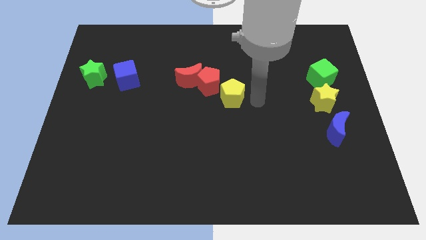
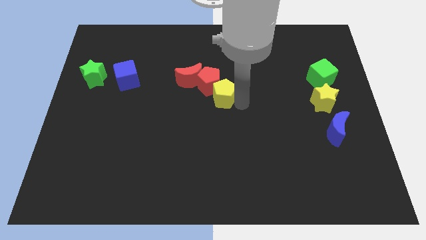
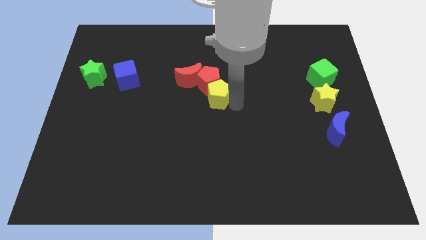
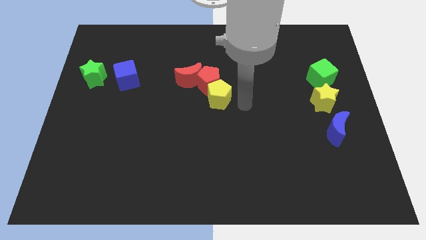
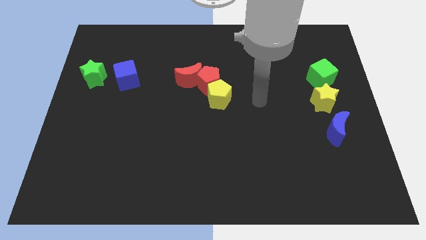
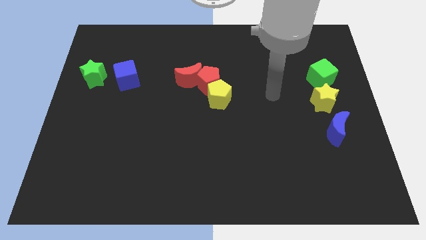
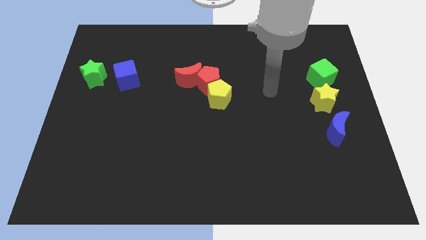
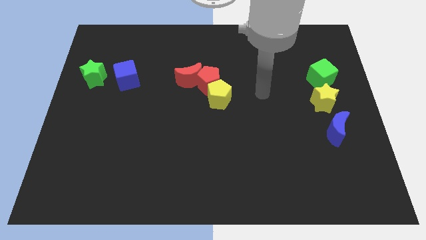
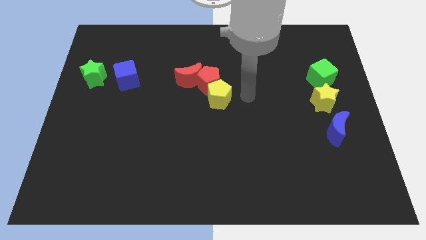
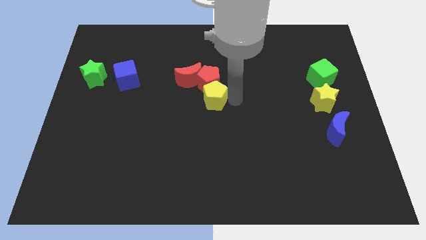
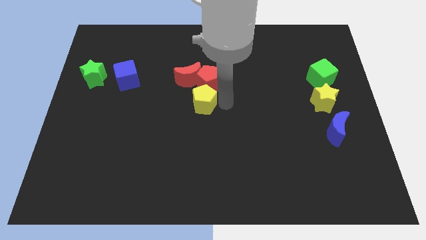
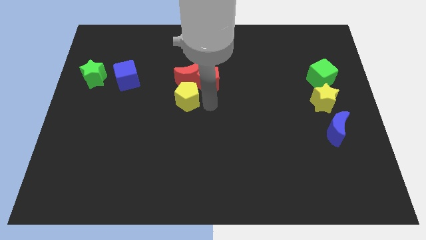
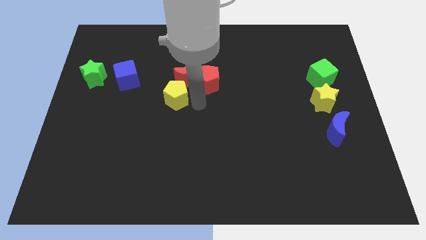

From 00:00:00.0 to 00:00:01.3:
move yellow pentagon below the red moon

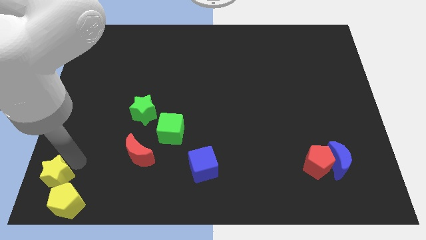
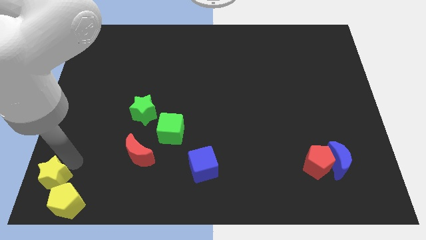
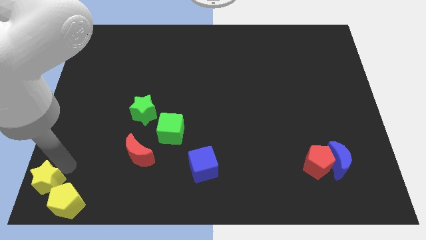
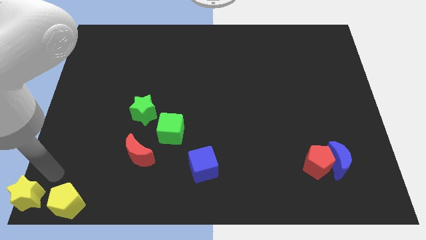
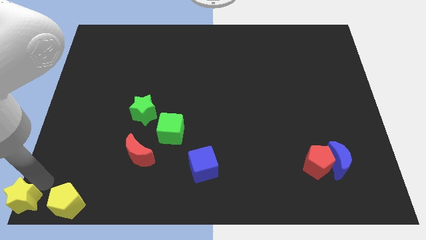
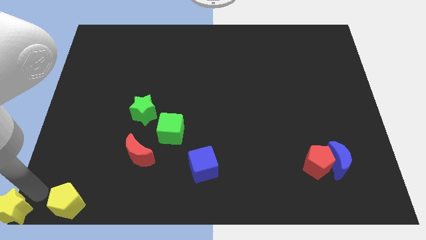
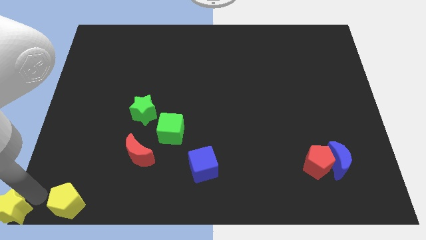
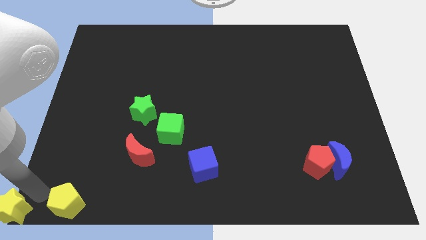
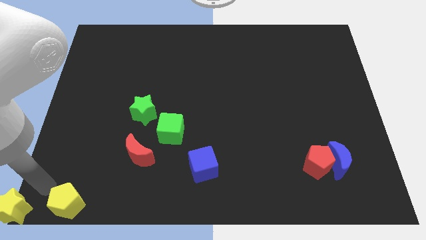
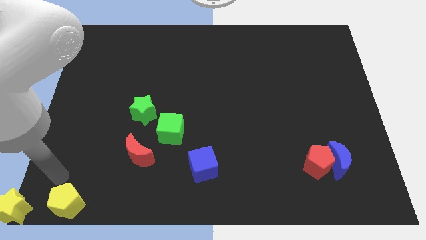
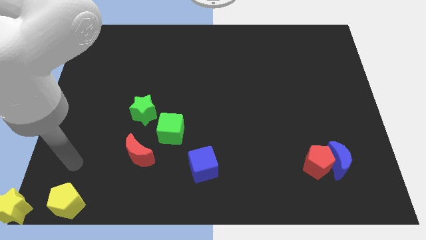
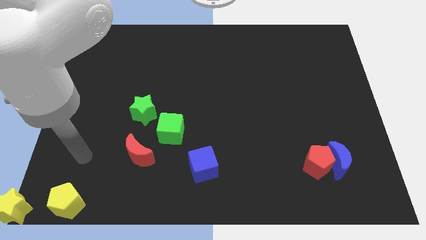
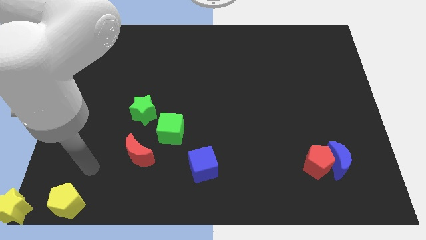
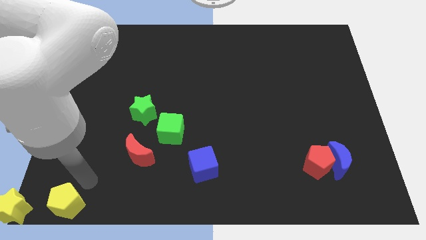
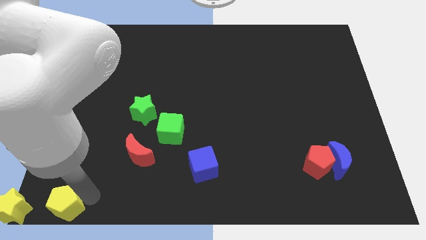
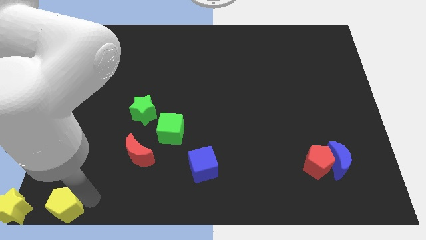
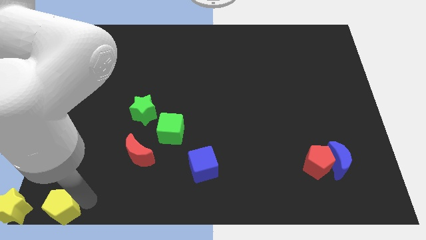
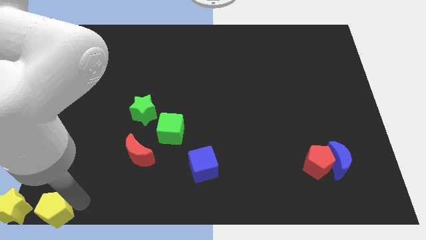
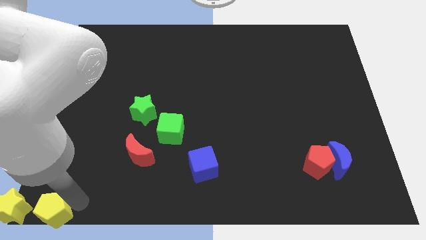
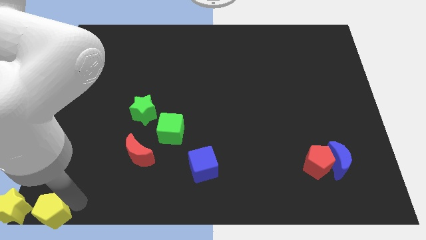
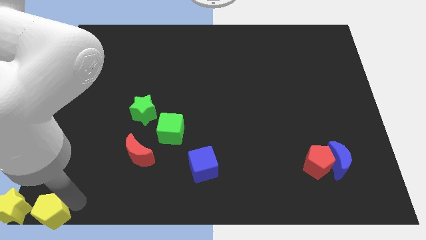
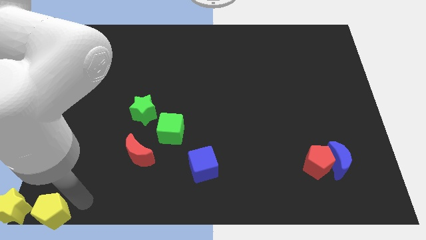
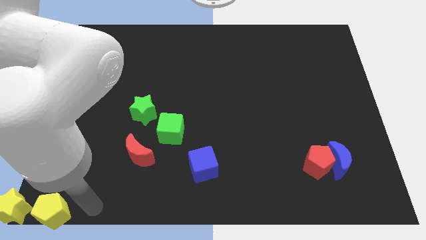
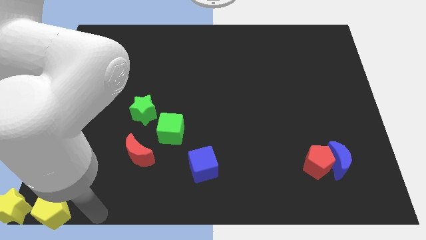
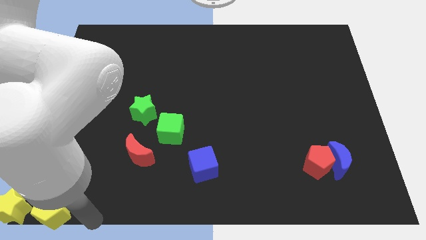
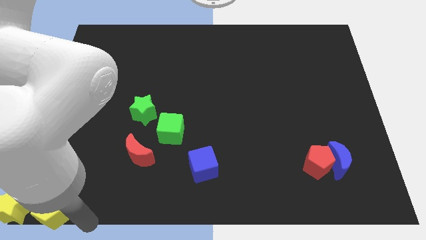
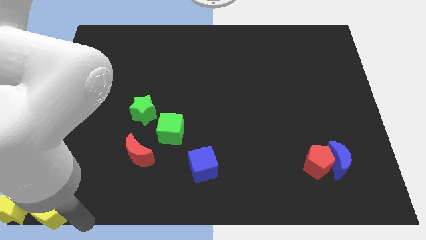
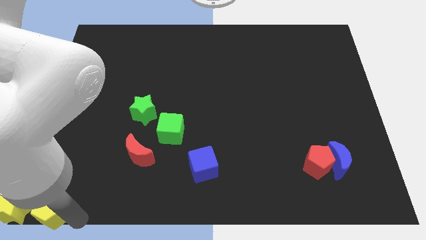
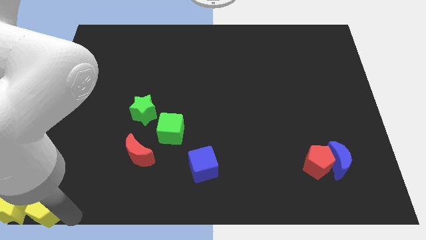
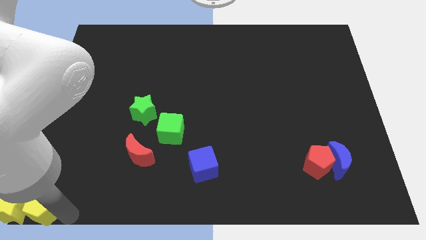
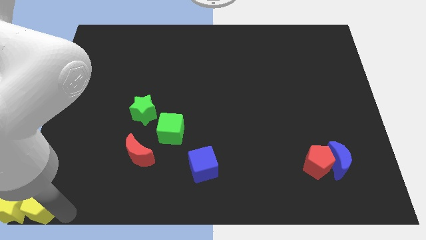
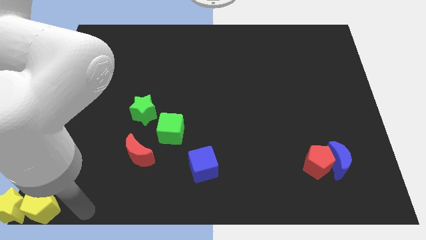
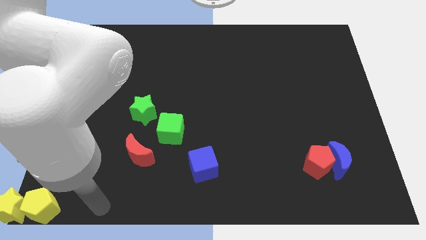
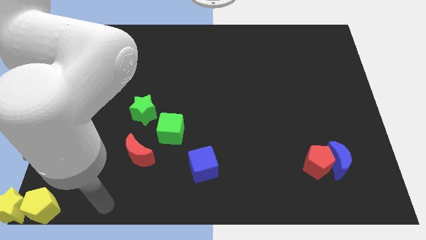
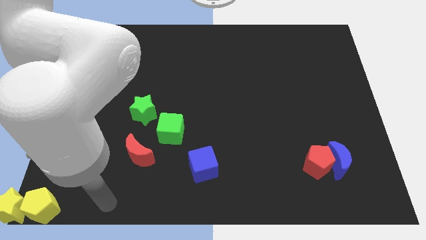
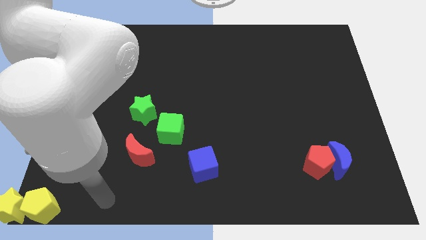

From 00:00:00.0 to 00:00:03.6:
move the yellow blocks to the bottom left corner side

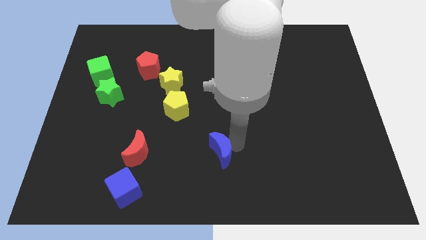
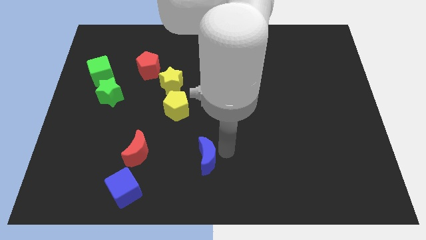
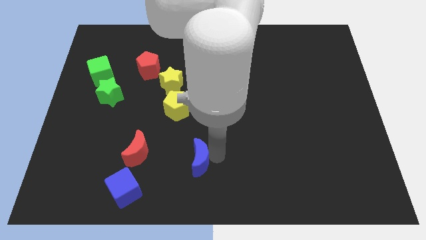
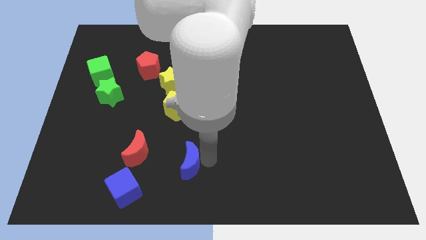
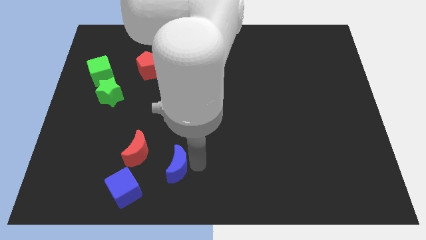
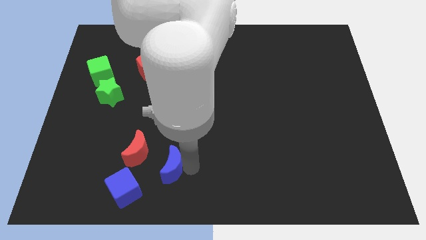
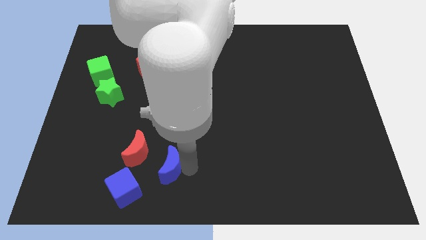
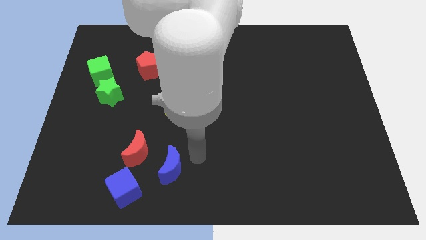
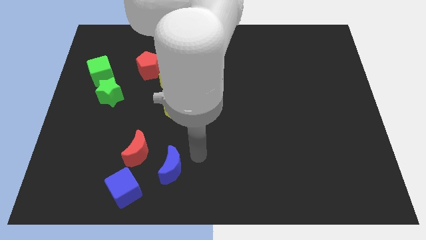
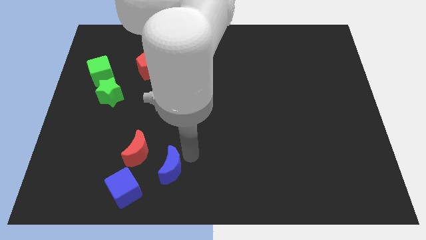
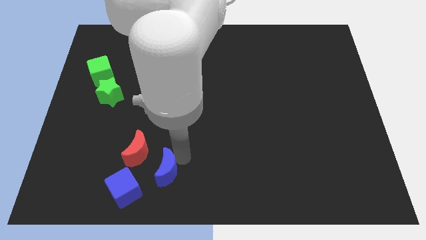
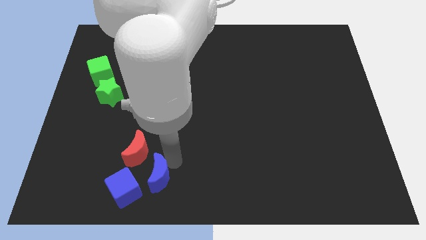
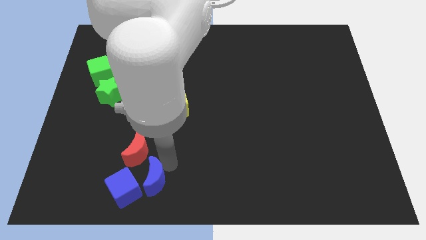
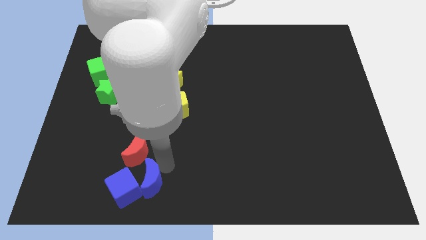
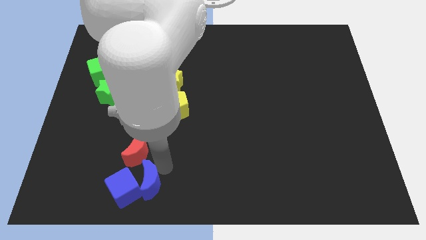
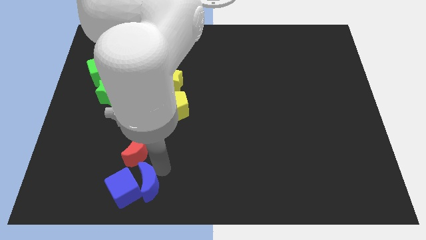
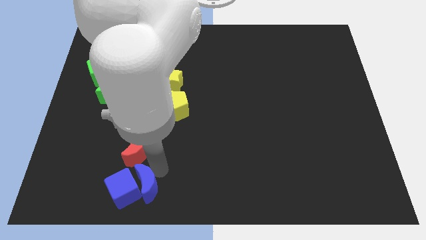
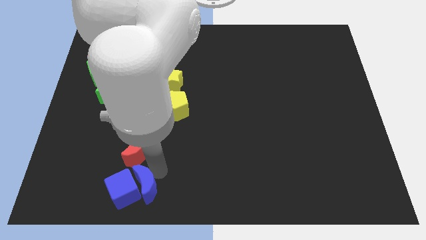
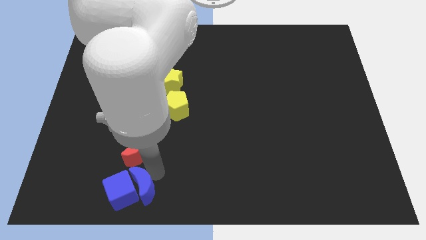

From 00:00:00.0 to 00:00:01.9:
push the blue moon into the blue cube

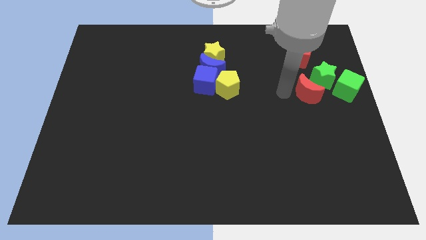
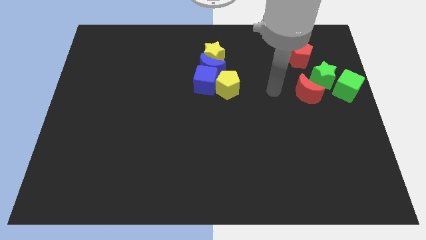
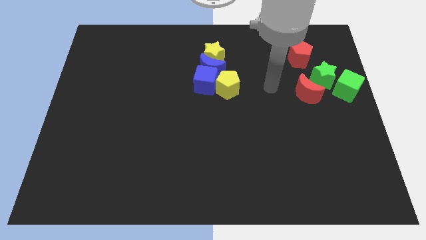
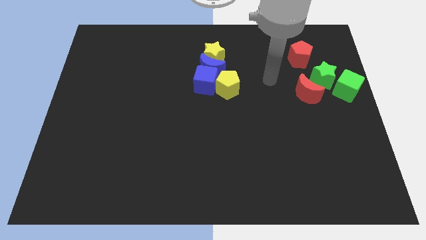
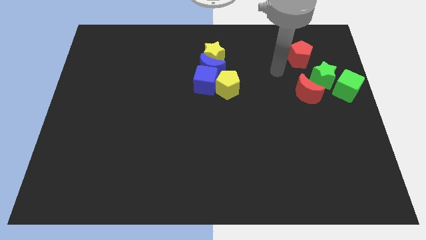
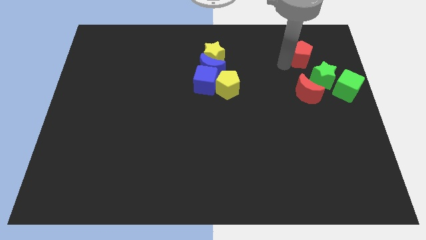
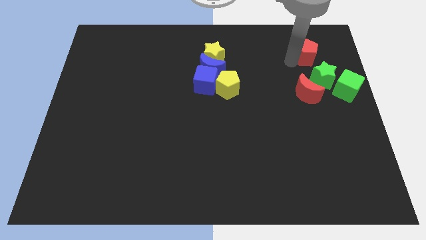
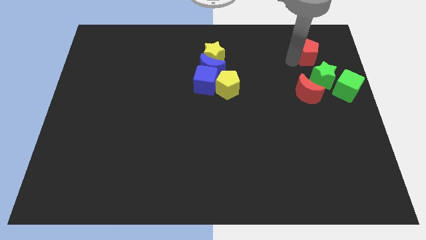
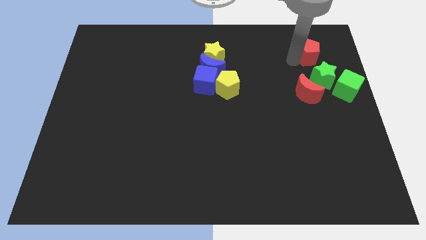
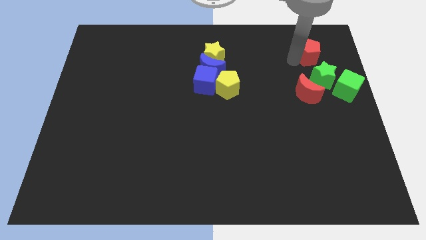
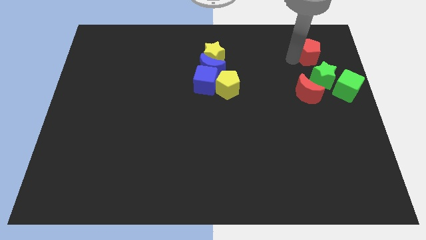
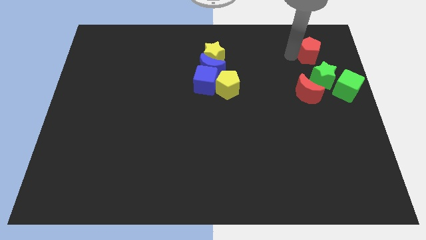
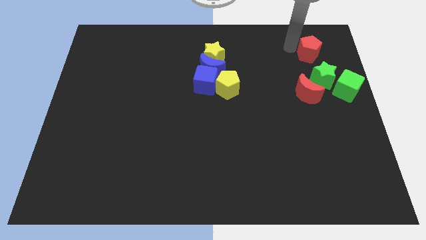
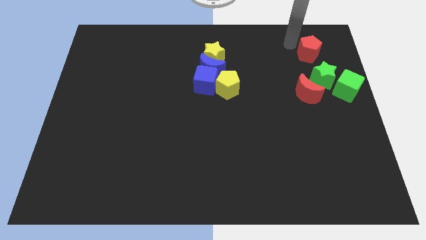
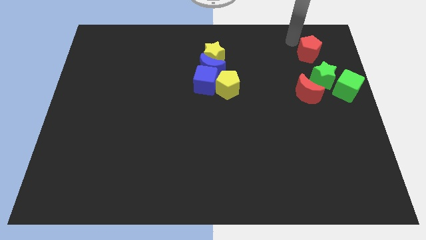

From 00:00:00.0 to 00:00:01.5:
push the red pentagon to the top right

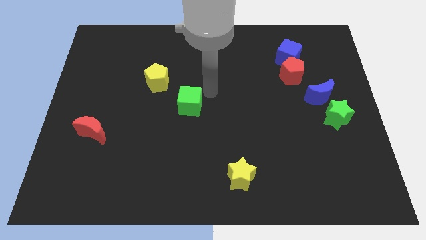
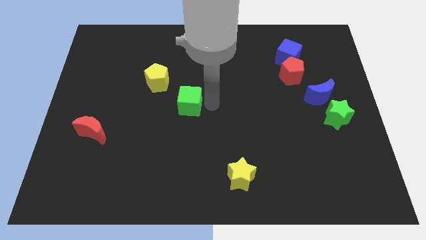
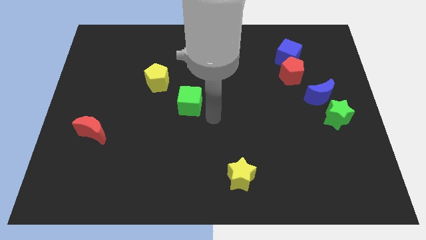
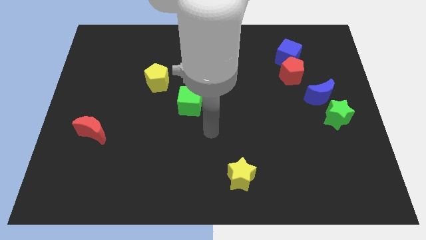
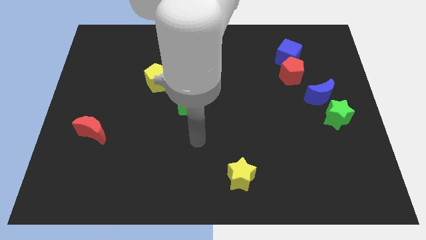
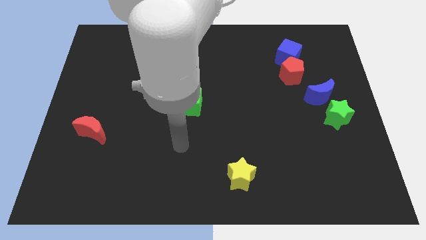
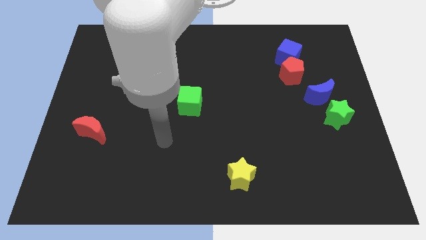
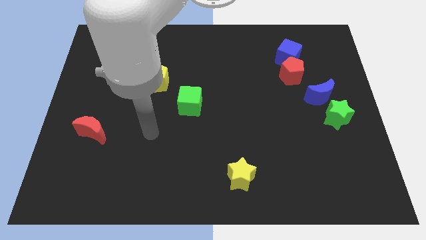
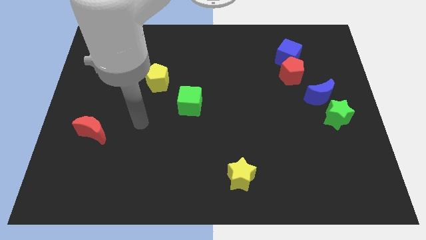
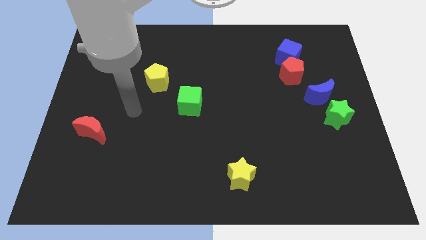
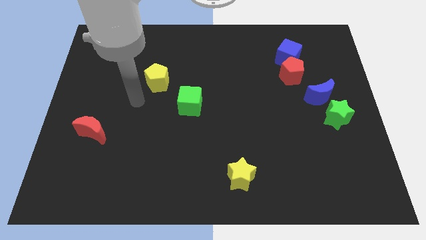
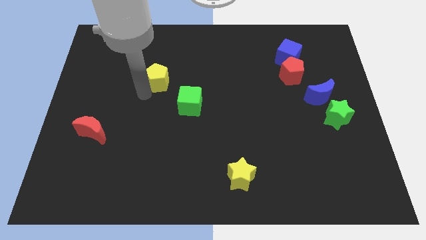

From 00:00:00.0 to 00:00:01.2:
go near the yellow pentagon
